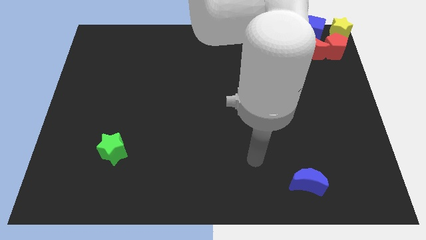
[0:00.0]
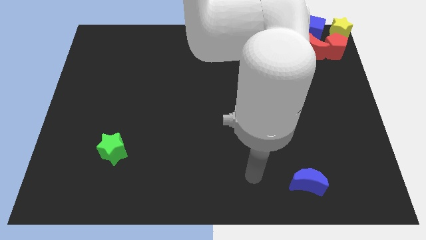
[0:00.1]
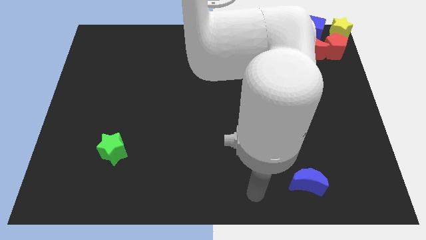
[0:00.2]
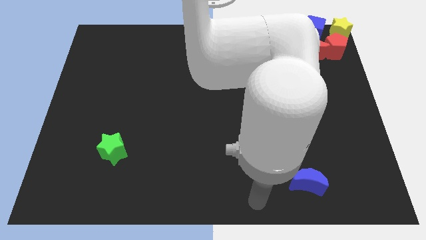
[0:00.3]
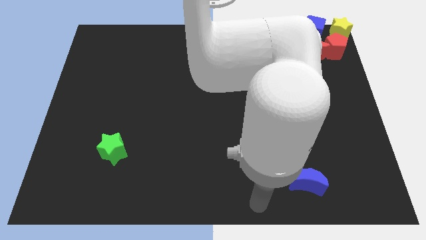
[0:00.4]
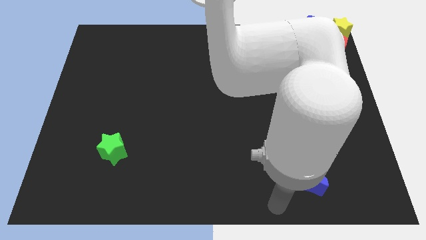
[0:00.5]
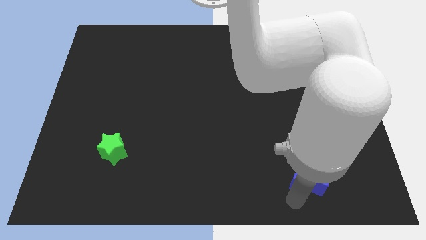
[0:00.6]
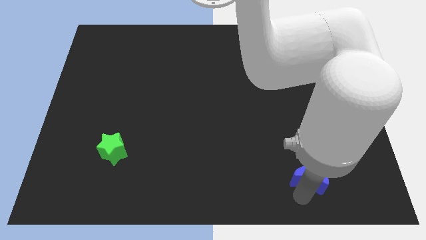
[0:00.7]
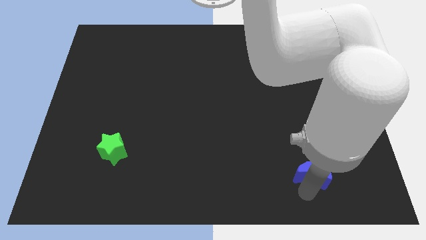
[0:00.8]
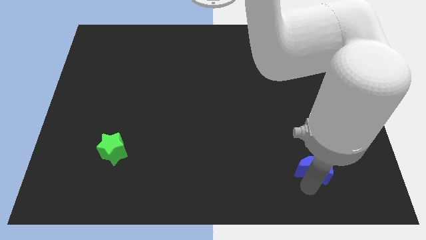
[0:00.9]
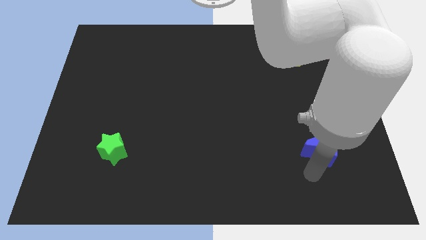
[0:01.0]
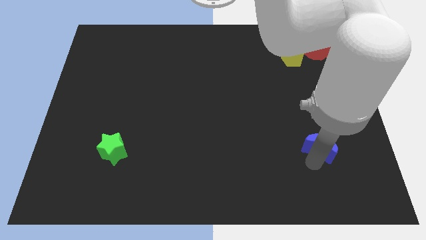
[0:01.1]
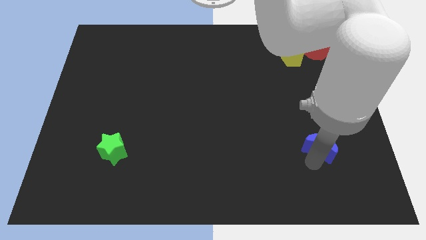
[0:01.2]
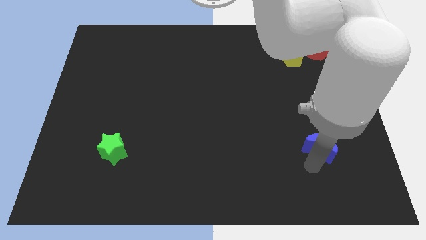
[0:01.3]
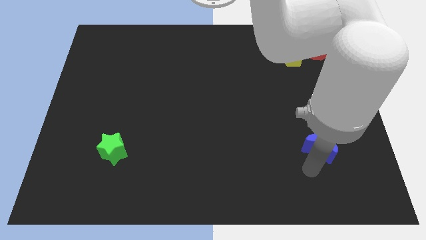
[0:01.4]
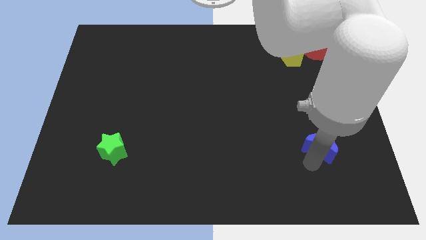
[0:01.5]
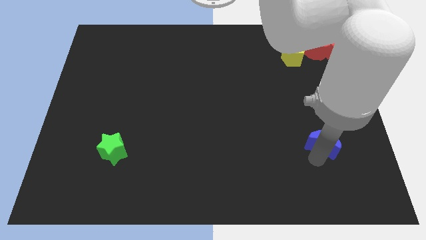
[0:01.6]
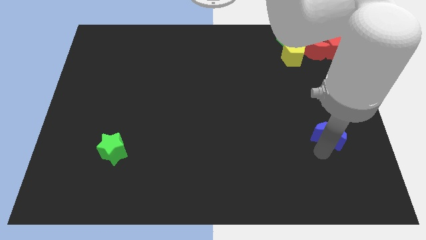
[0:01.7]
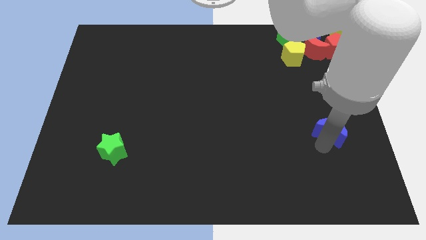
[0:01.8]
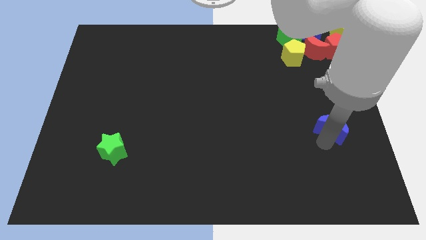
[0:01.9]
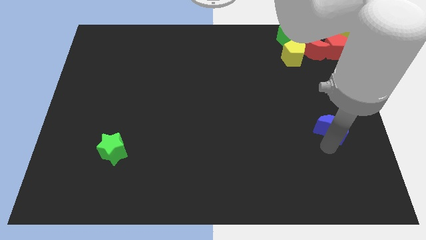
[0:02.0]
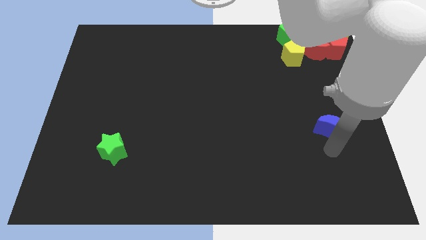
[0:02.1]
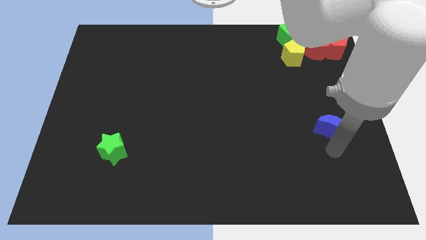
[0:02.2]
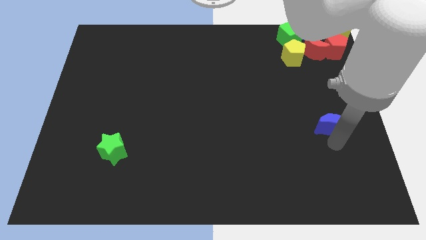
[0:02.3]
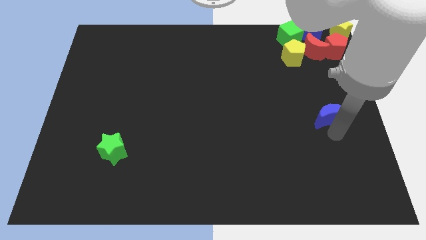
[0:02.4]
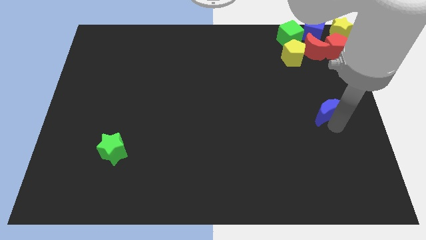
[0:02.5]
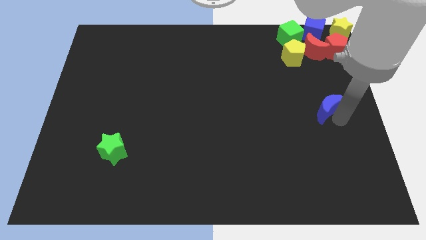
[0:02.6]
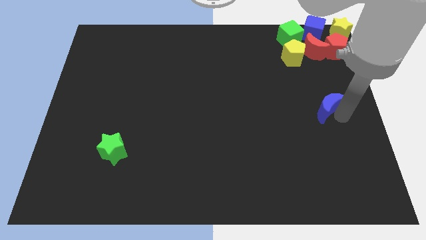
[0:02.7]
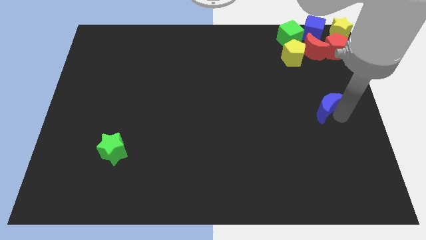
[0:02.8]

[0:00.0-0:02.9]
move the blue moon center right of the board

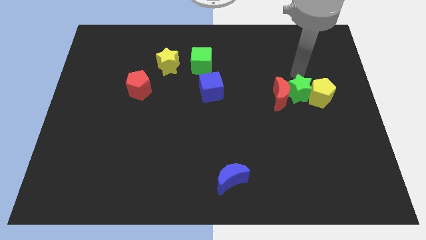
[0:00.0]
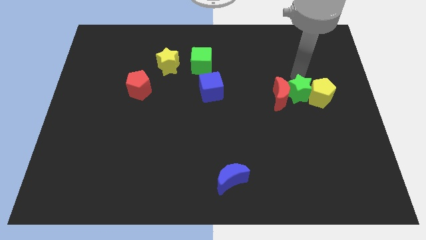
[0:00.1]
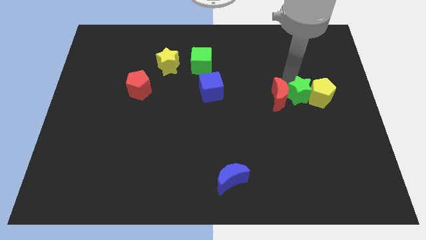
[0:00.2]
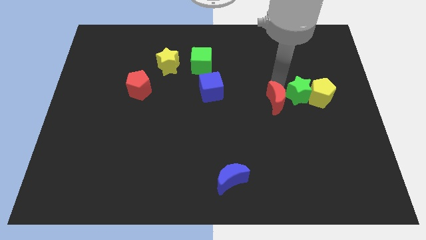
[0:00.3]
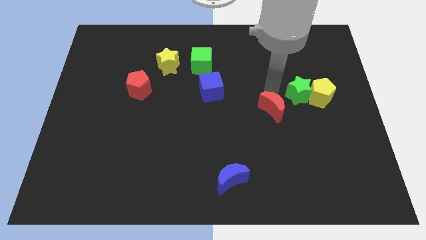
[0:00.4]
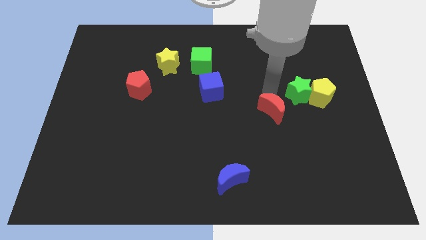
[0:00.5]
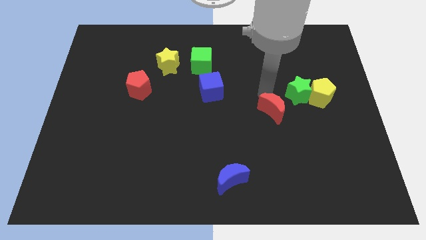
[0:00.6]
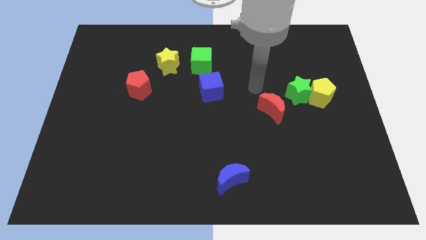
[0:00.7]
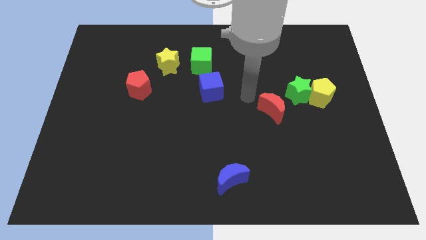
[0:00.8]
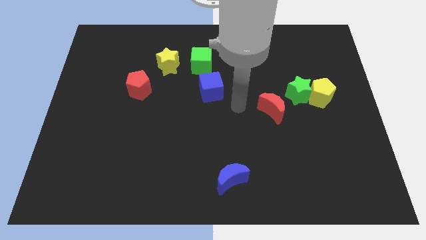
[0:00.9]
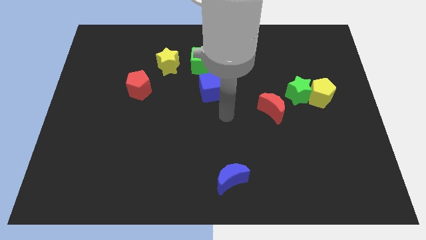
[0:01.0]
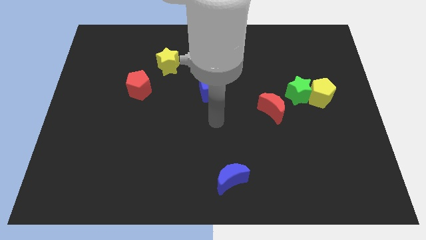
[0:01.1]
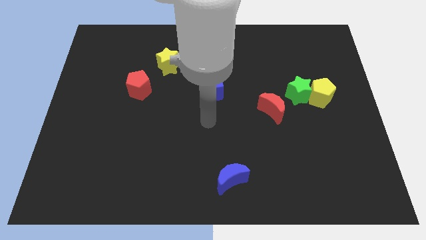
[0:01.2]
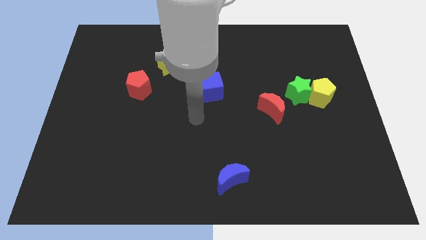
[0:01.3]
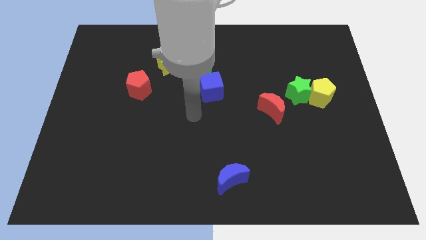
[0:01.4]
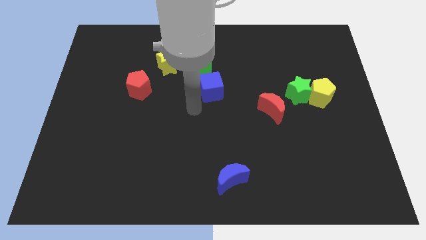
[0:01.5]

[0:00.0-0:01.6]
separate the red crescent from the group of blocks

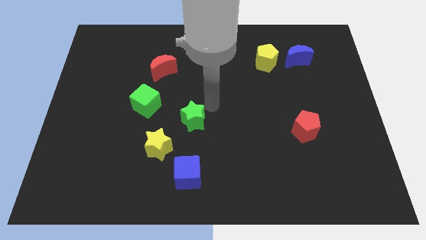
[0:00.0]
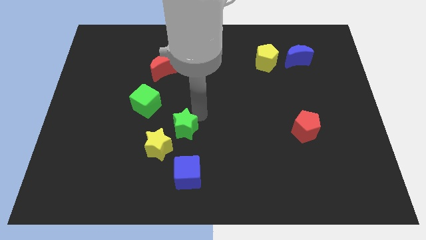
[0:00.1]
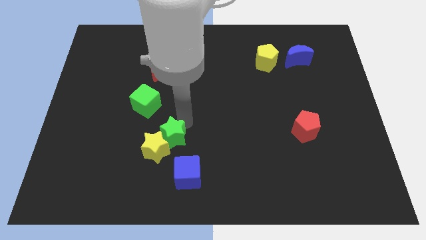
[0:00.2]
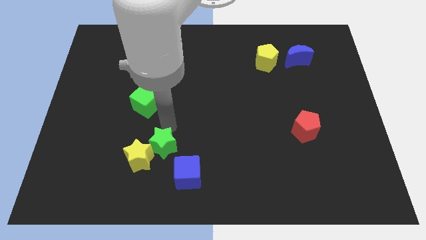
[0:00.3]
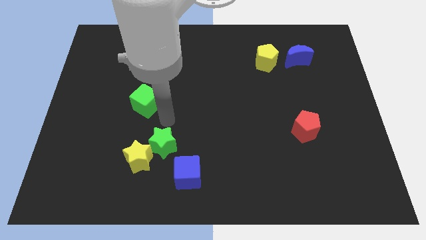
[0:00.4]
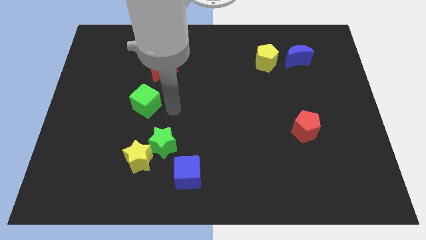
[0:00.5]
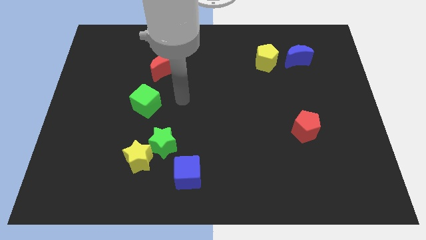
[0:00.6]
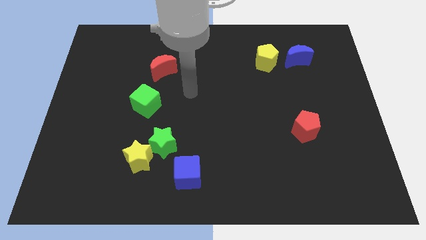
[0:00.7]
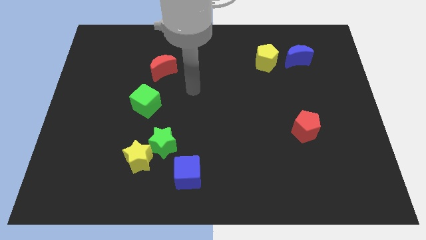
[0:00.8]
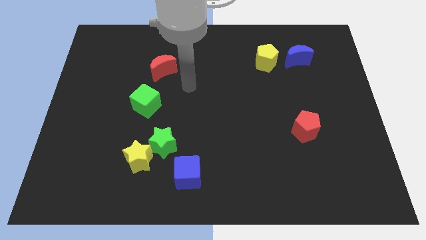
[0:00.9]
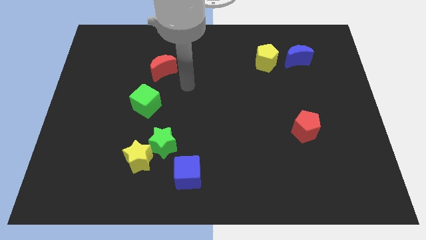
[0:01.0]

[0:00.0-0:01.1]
push the green star into the yellow star

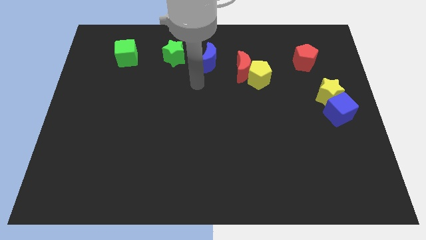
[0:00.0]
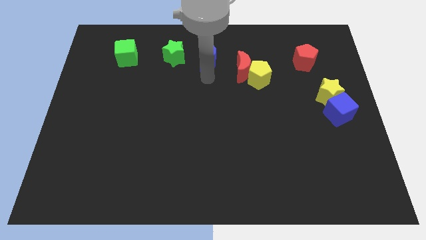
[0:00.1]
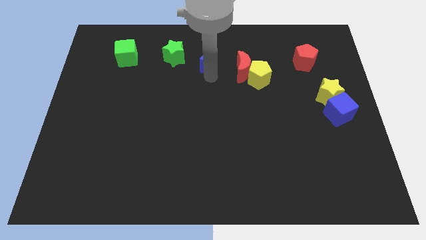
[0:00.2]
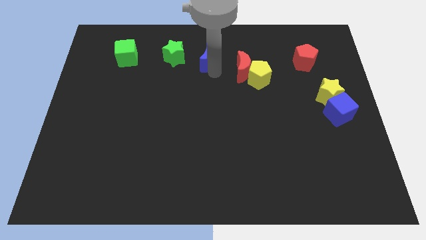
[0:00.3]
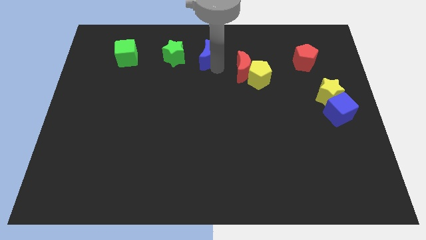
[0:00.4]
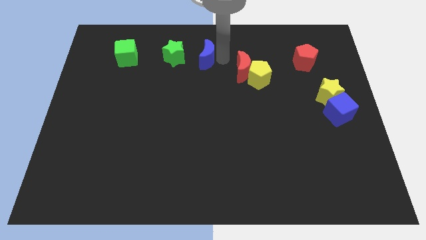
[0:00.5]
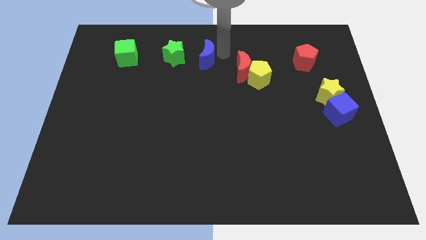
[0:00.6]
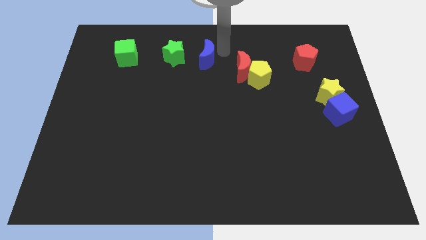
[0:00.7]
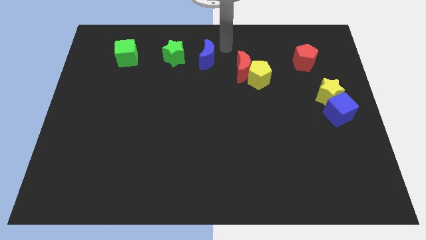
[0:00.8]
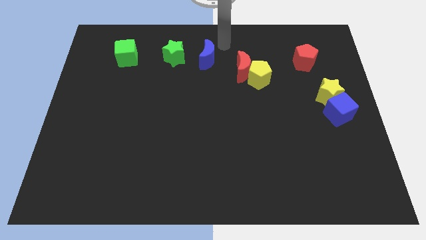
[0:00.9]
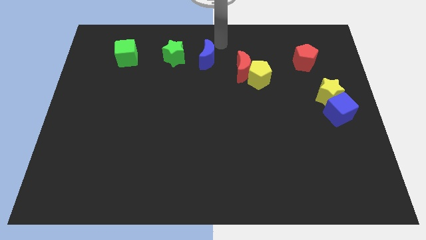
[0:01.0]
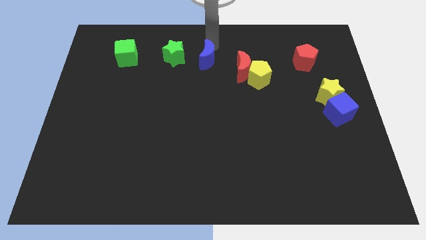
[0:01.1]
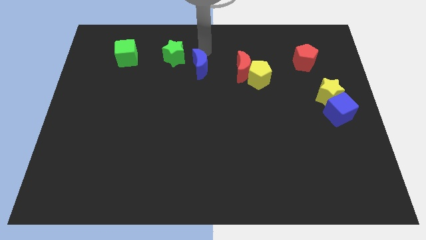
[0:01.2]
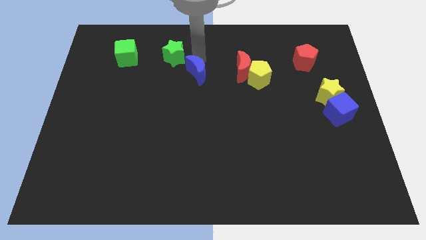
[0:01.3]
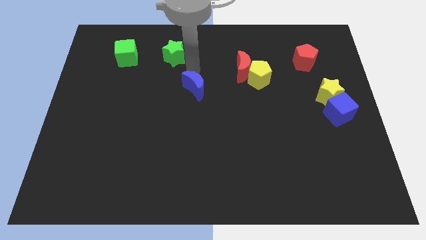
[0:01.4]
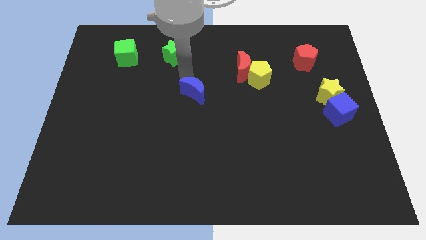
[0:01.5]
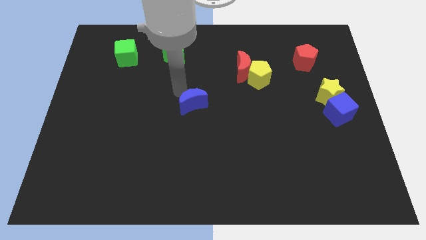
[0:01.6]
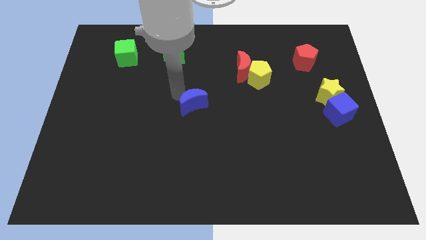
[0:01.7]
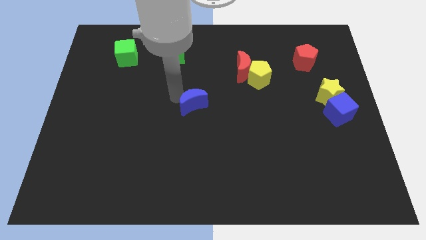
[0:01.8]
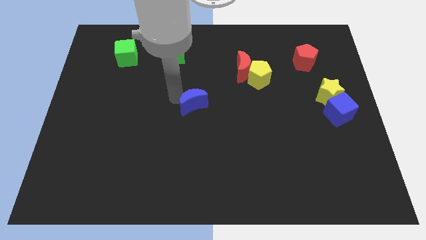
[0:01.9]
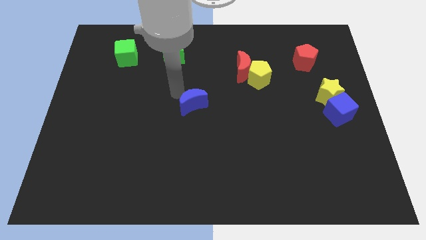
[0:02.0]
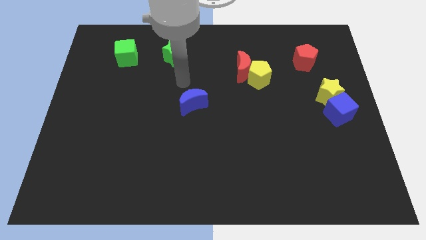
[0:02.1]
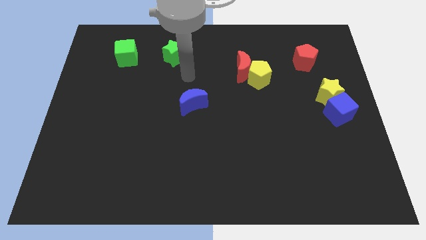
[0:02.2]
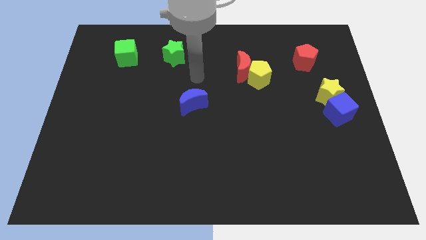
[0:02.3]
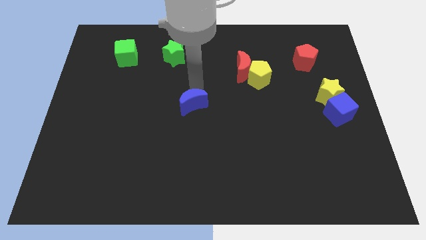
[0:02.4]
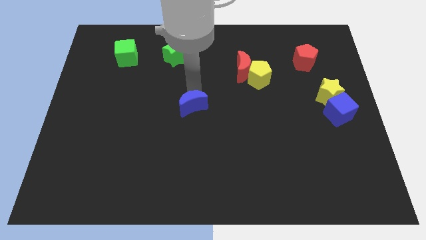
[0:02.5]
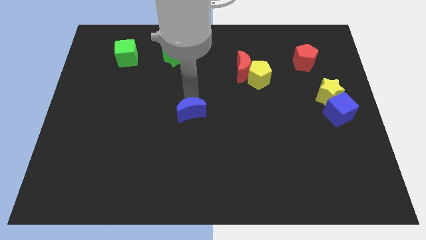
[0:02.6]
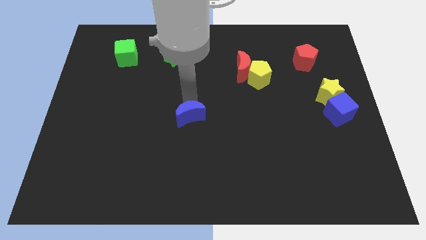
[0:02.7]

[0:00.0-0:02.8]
place the blue moon at the center of the board

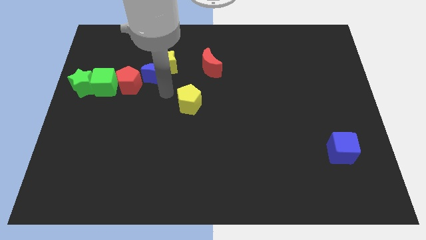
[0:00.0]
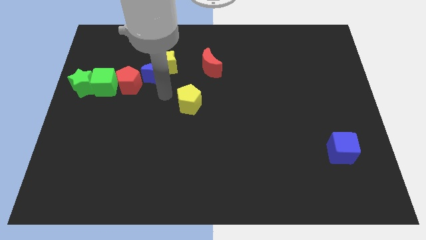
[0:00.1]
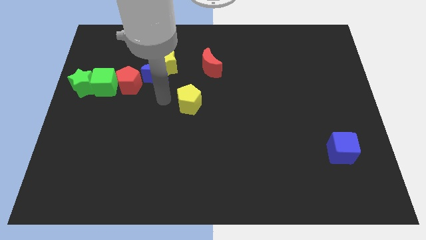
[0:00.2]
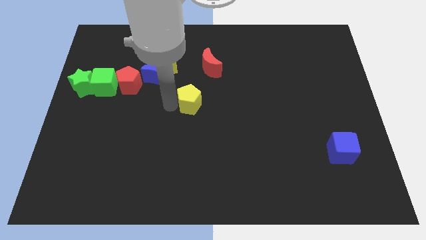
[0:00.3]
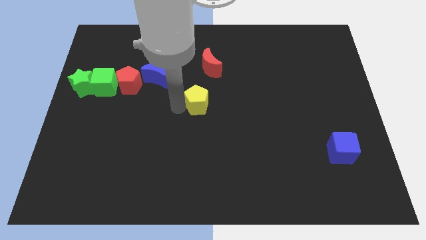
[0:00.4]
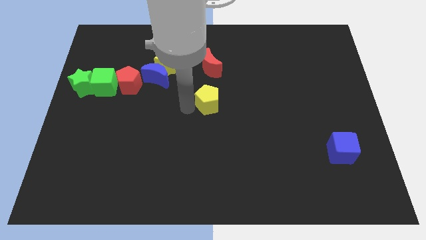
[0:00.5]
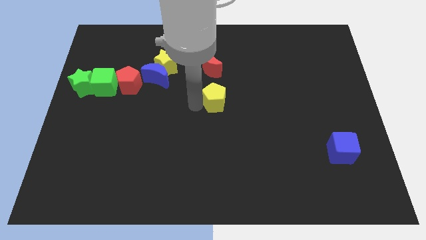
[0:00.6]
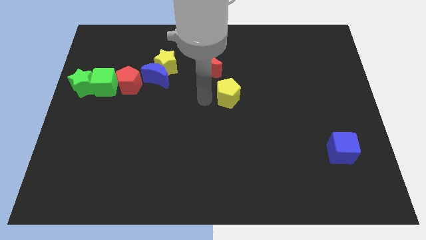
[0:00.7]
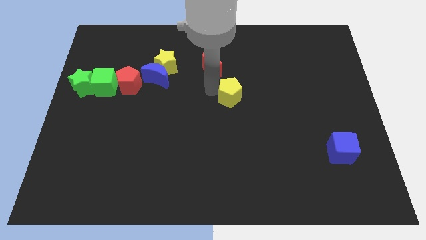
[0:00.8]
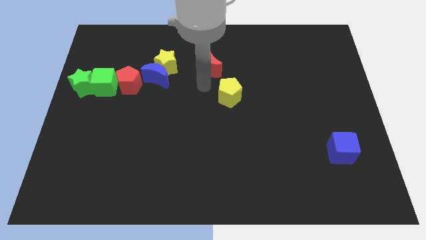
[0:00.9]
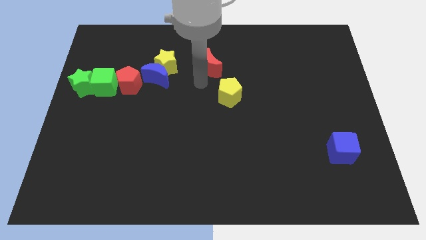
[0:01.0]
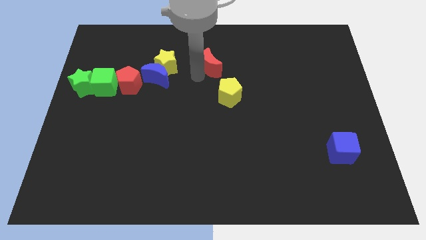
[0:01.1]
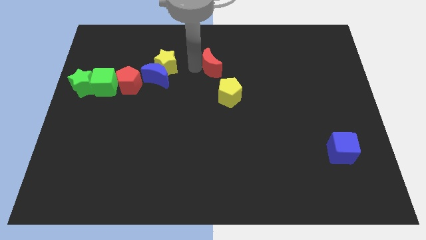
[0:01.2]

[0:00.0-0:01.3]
move the yellow star slightly towards the center of the board
